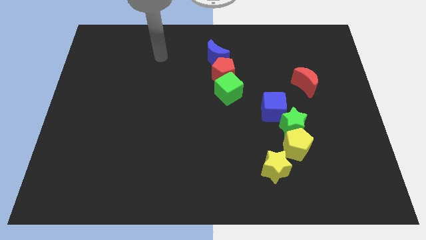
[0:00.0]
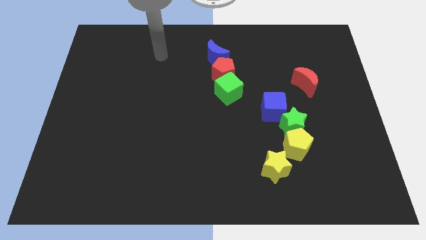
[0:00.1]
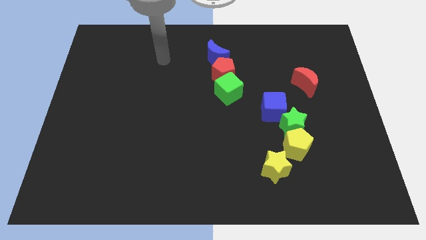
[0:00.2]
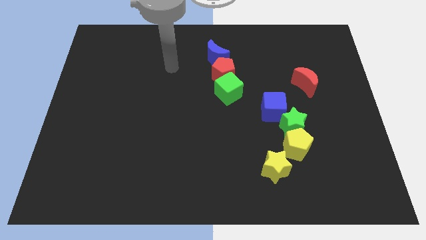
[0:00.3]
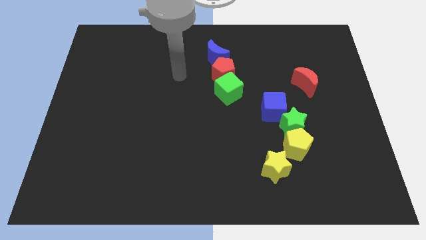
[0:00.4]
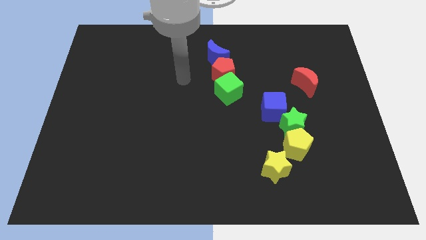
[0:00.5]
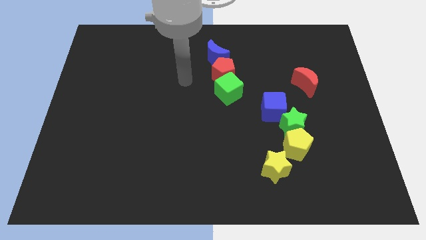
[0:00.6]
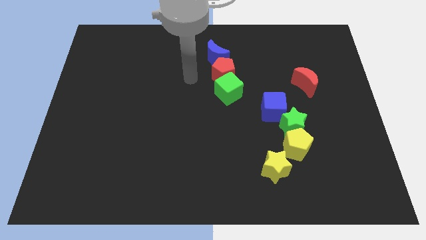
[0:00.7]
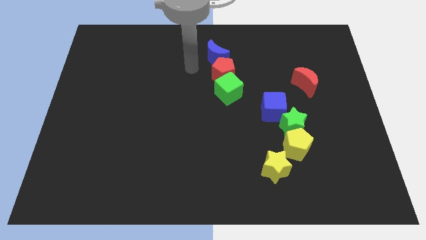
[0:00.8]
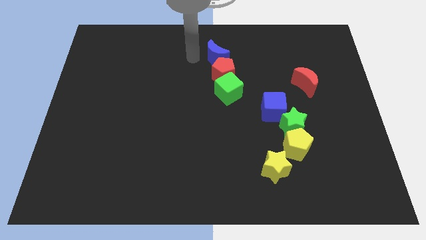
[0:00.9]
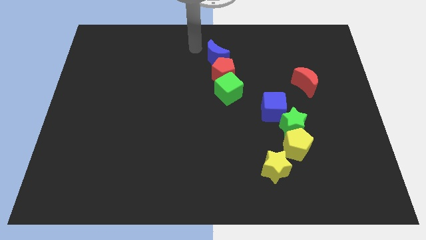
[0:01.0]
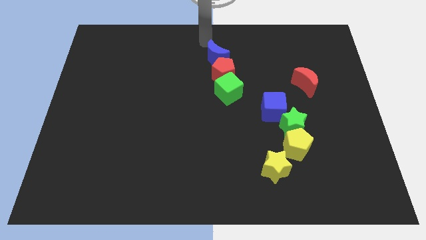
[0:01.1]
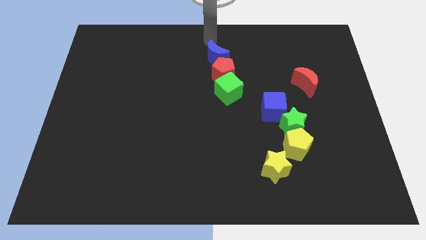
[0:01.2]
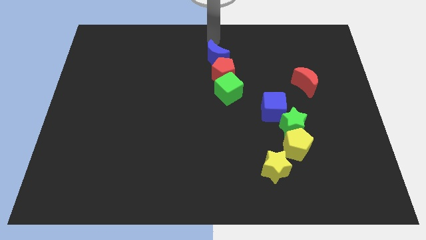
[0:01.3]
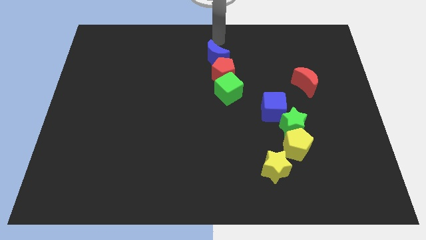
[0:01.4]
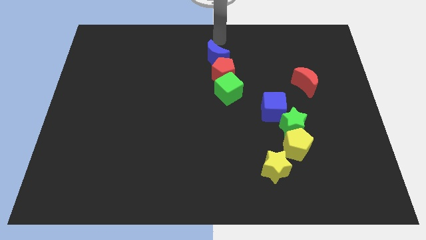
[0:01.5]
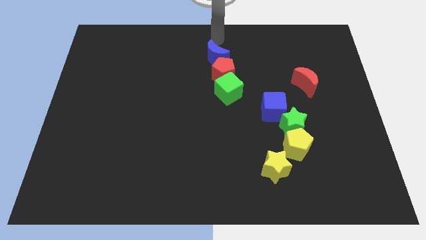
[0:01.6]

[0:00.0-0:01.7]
place your hand above the blue crescent

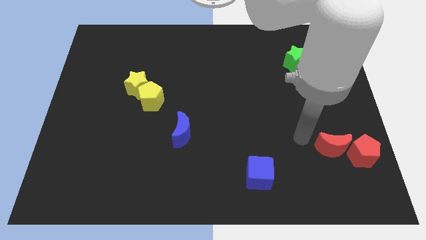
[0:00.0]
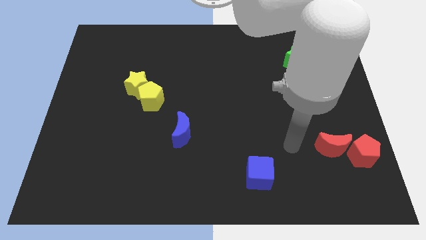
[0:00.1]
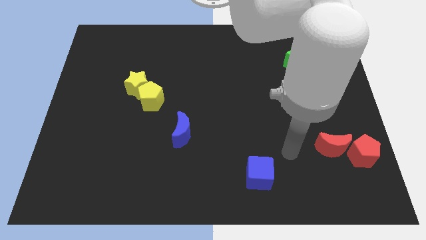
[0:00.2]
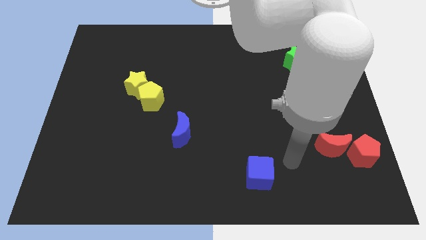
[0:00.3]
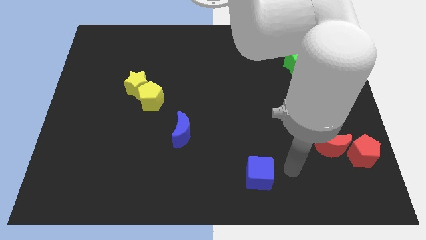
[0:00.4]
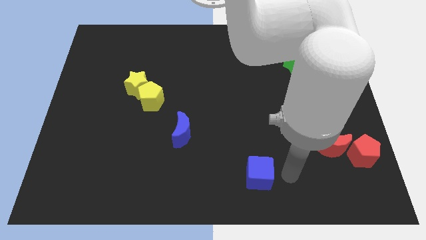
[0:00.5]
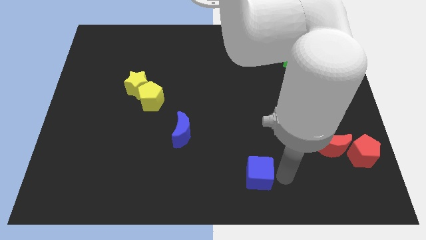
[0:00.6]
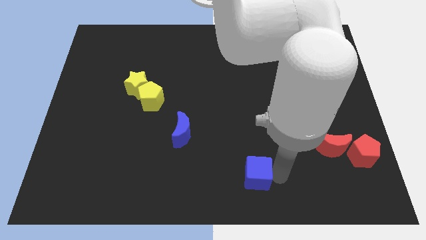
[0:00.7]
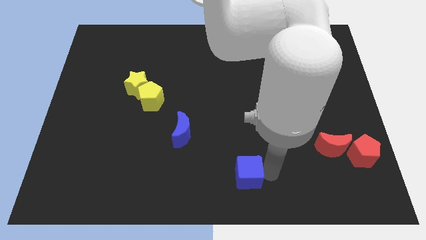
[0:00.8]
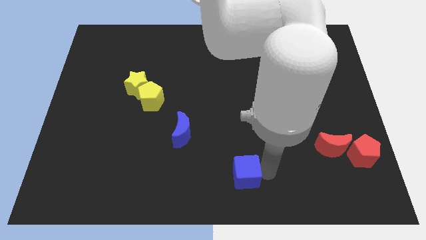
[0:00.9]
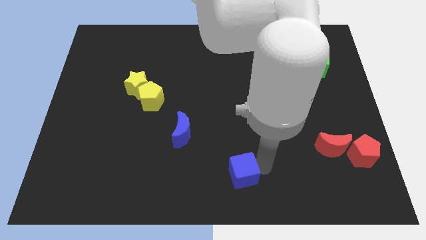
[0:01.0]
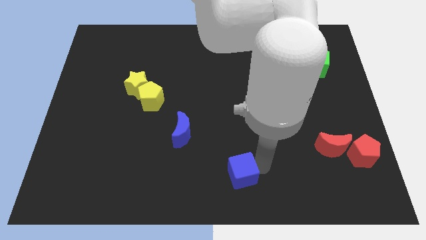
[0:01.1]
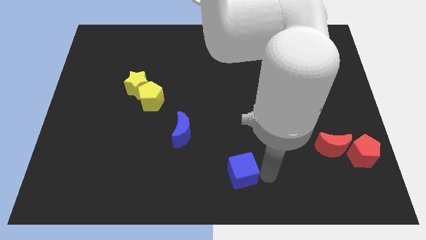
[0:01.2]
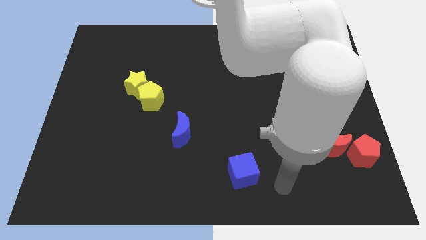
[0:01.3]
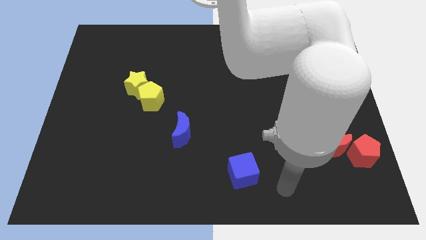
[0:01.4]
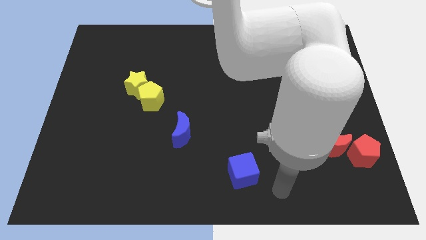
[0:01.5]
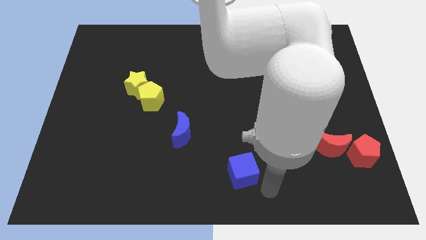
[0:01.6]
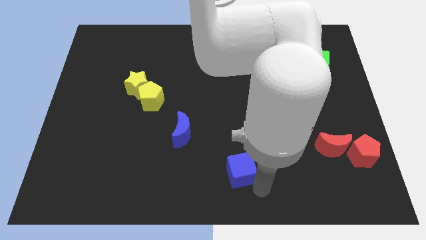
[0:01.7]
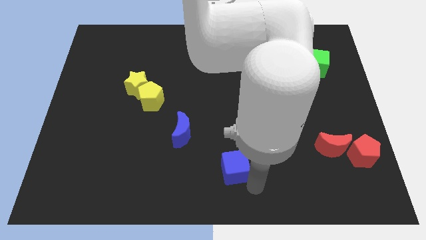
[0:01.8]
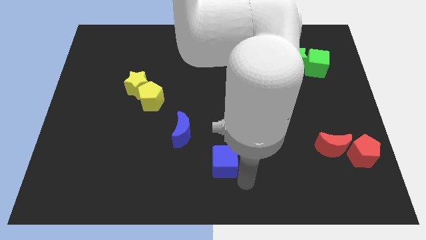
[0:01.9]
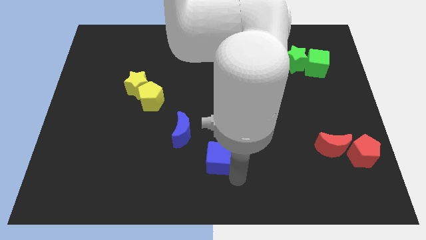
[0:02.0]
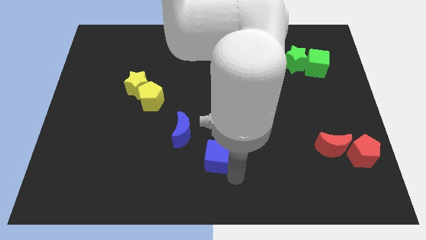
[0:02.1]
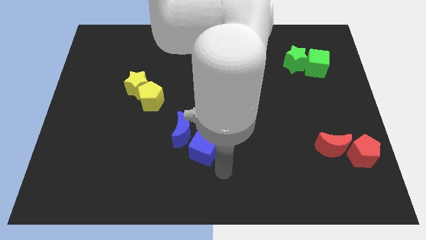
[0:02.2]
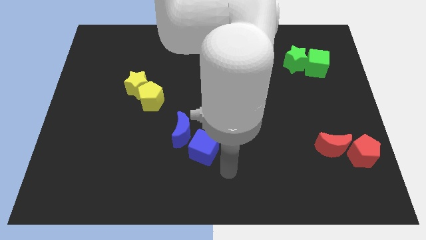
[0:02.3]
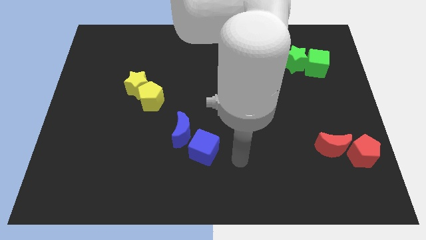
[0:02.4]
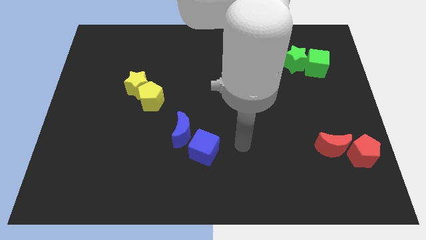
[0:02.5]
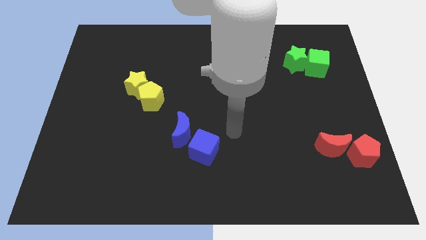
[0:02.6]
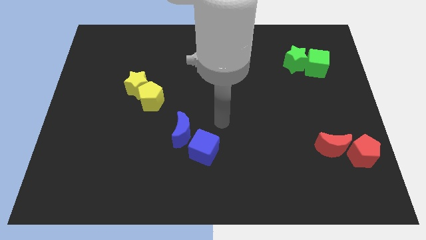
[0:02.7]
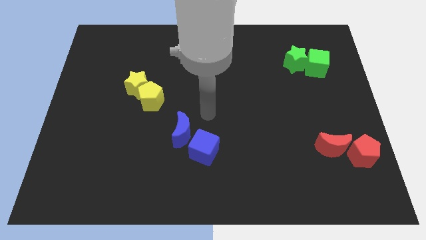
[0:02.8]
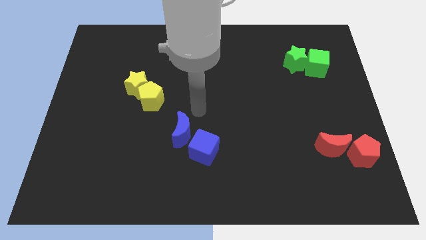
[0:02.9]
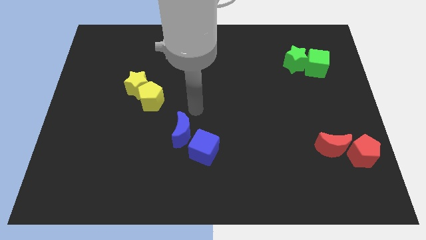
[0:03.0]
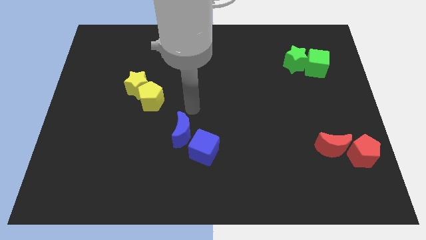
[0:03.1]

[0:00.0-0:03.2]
move the blue cube to the right of the blue moon

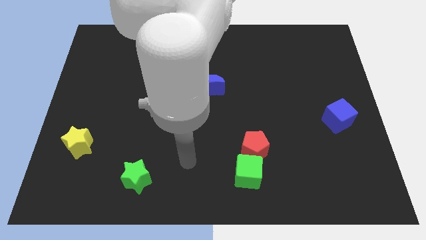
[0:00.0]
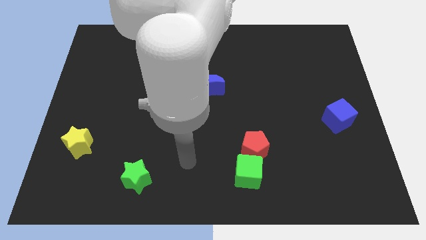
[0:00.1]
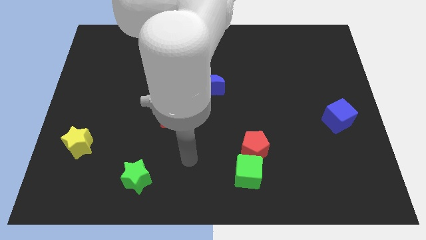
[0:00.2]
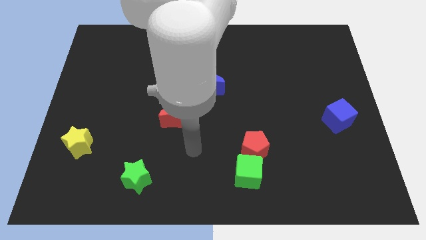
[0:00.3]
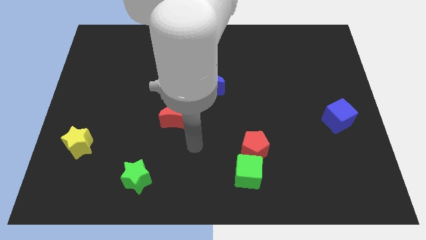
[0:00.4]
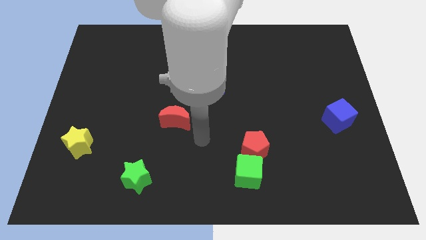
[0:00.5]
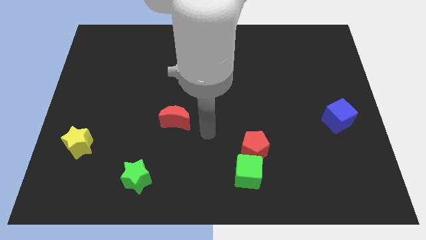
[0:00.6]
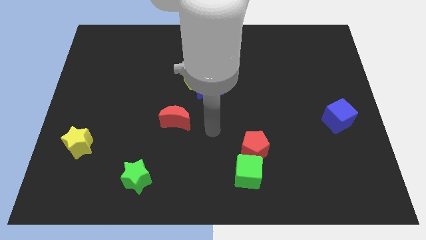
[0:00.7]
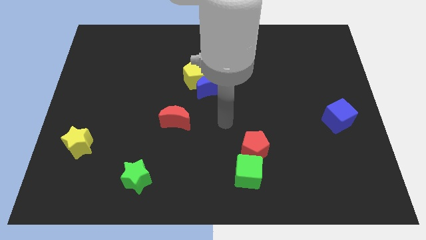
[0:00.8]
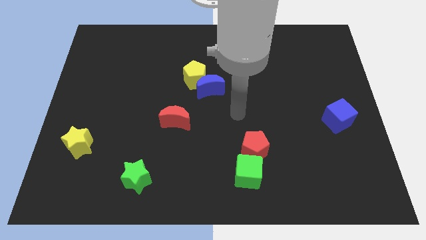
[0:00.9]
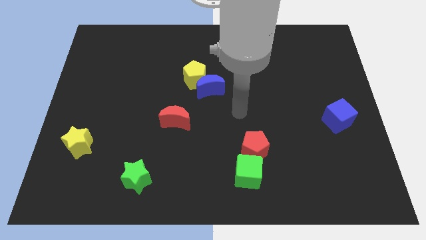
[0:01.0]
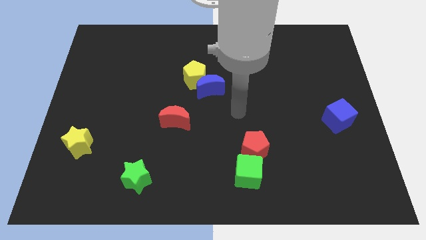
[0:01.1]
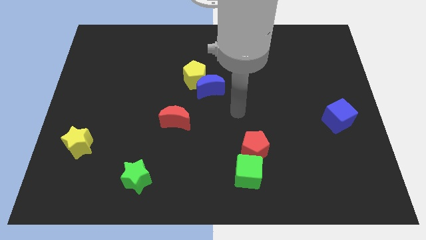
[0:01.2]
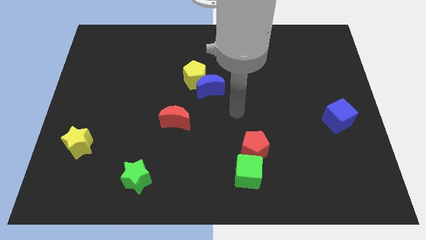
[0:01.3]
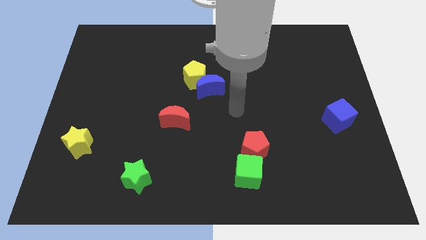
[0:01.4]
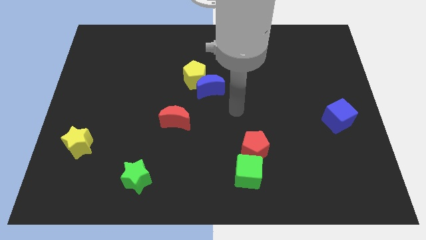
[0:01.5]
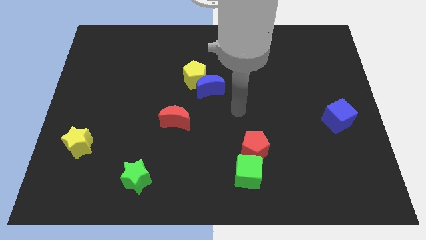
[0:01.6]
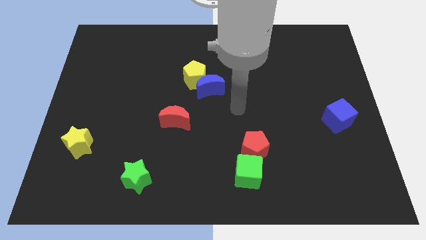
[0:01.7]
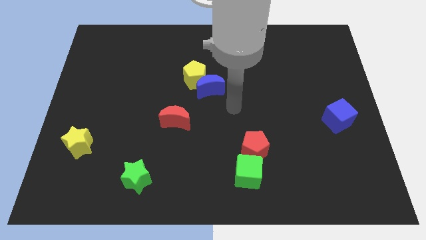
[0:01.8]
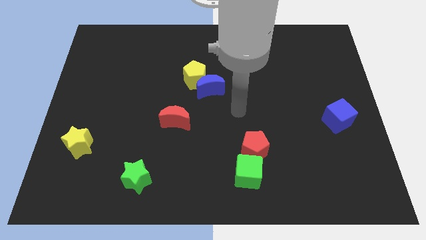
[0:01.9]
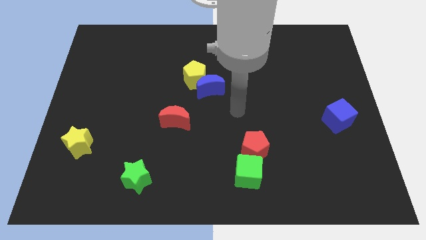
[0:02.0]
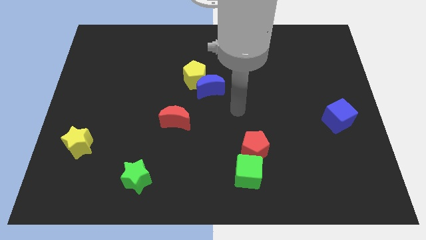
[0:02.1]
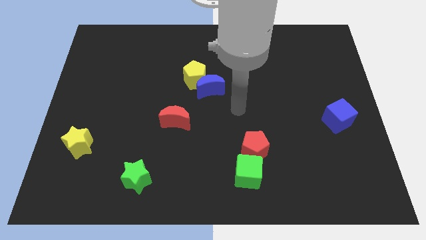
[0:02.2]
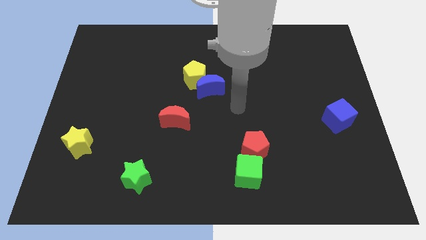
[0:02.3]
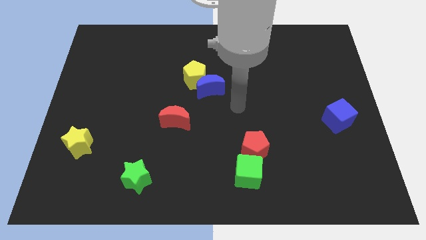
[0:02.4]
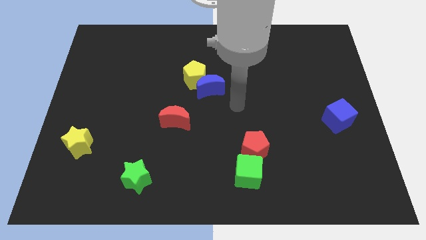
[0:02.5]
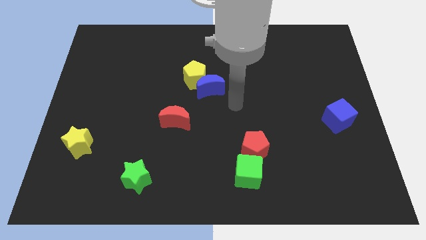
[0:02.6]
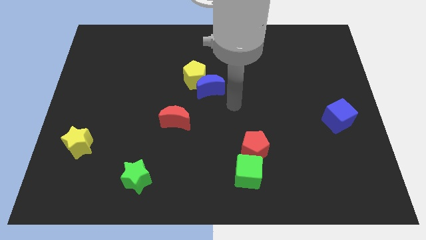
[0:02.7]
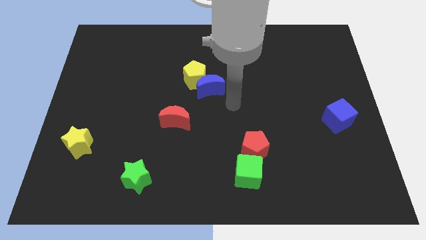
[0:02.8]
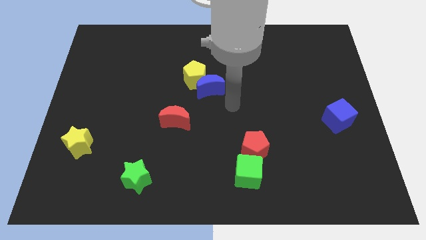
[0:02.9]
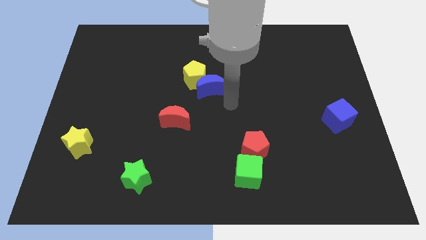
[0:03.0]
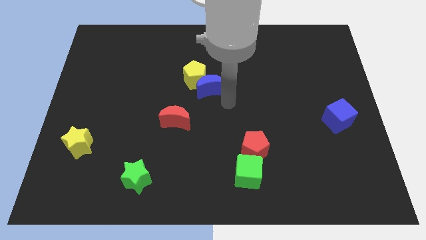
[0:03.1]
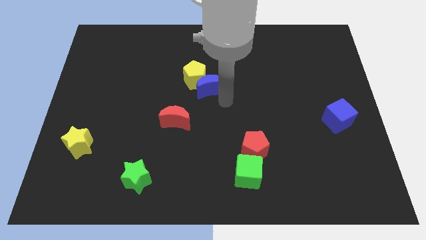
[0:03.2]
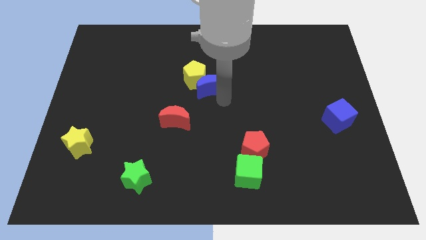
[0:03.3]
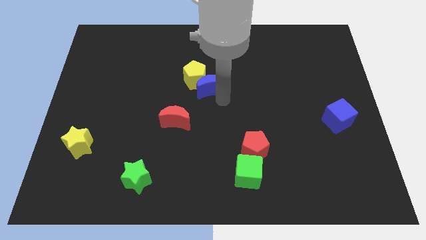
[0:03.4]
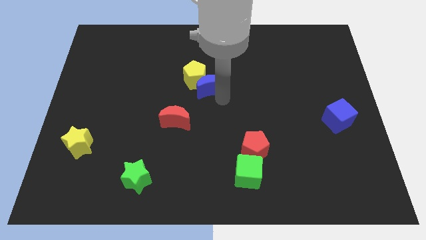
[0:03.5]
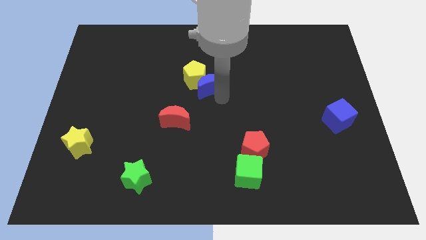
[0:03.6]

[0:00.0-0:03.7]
move your arm to the bottom of blue crescent

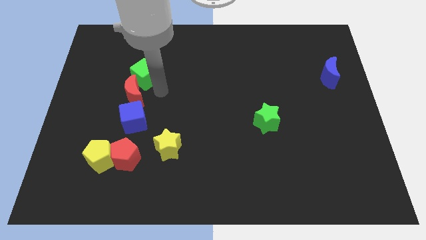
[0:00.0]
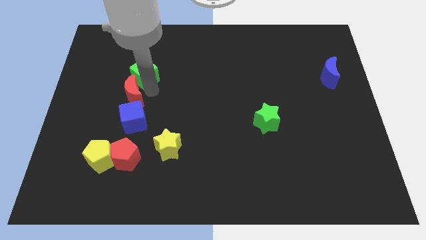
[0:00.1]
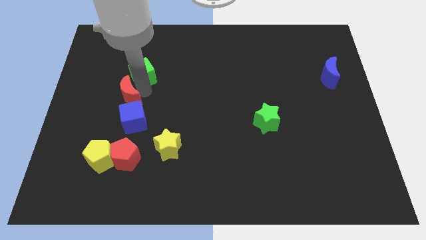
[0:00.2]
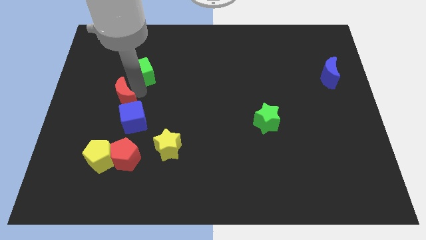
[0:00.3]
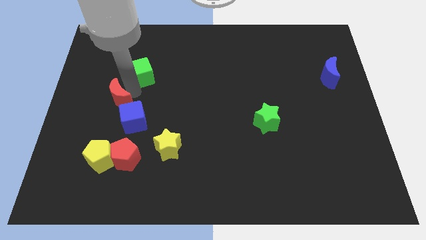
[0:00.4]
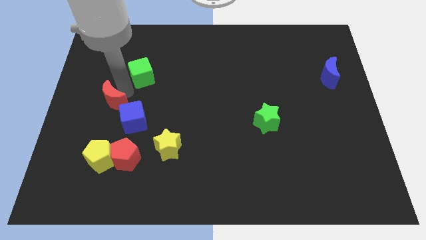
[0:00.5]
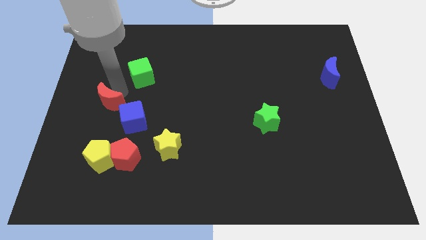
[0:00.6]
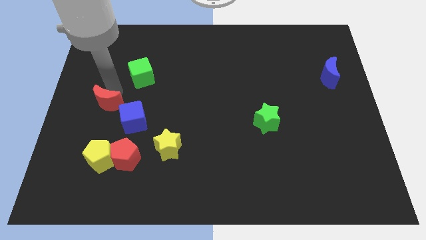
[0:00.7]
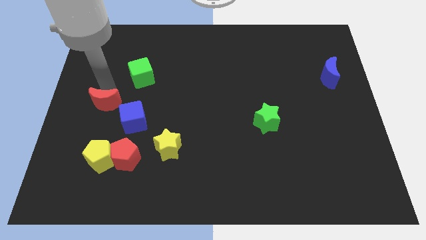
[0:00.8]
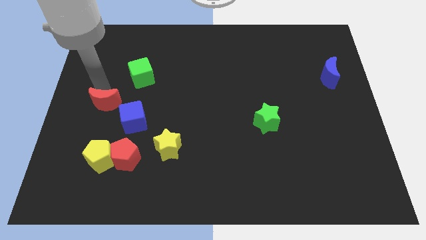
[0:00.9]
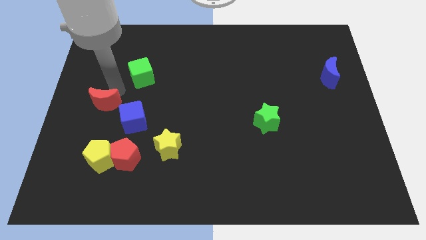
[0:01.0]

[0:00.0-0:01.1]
separate green cube and red moon
